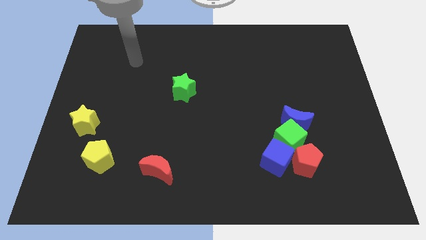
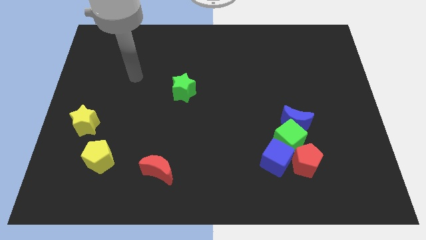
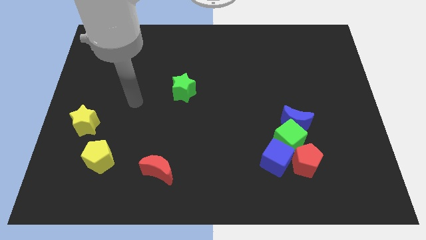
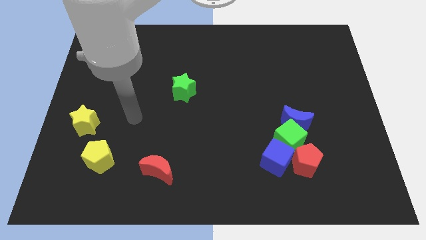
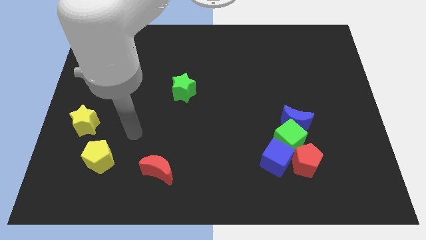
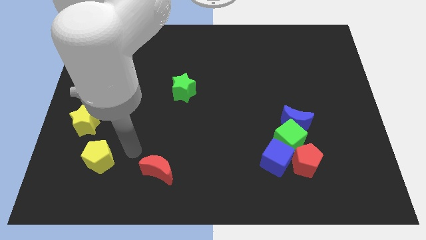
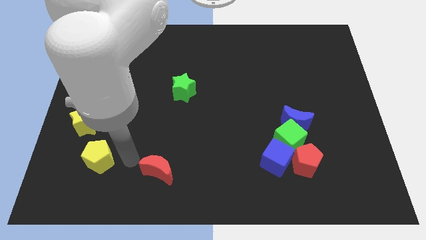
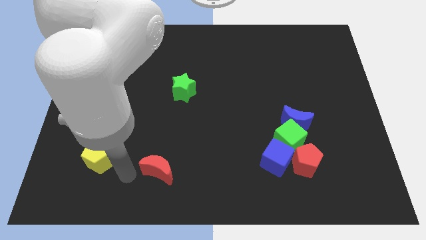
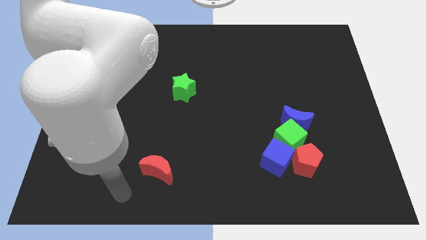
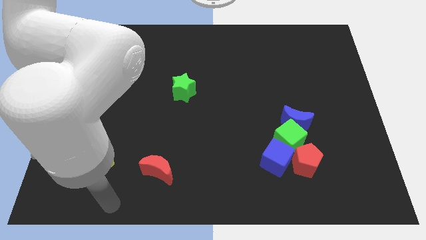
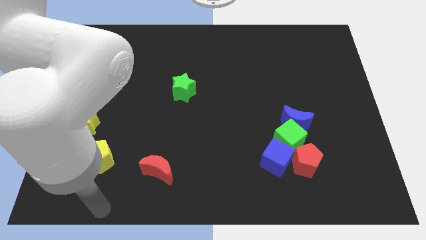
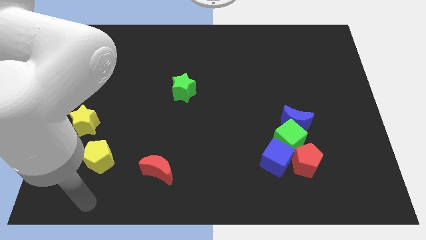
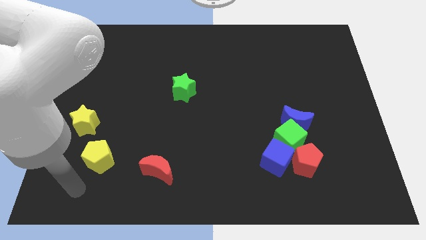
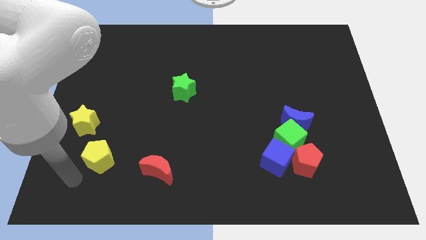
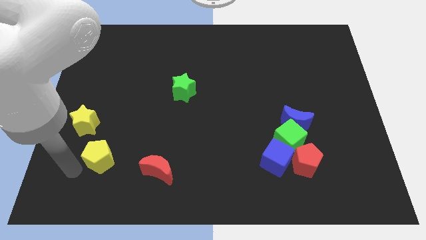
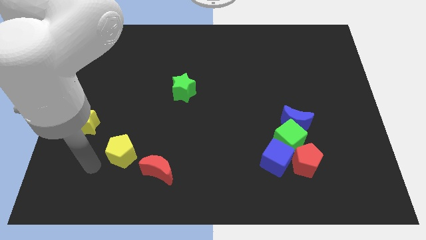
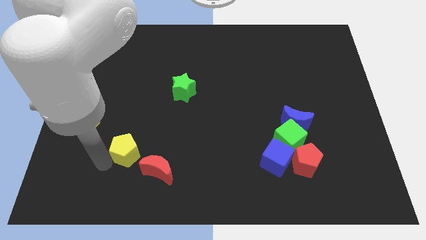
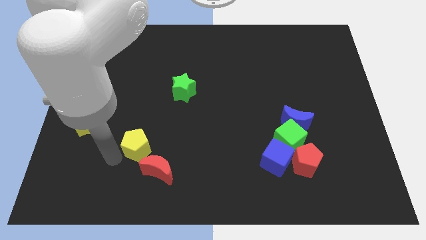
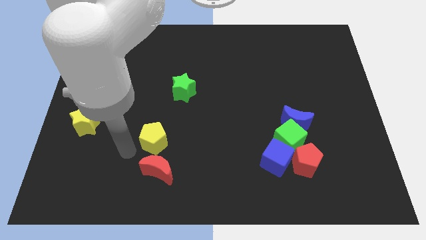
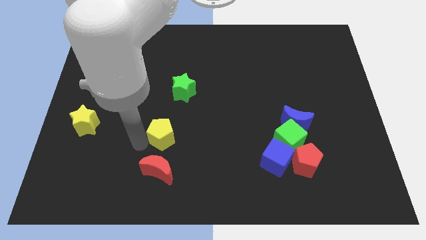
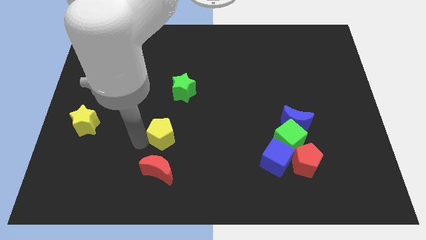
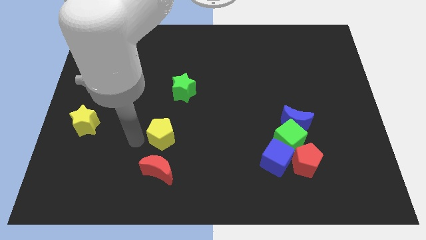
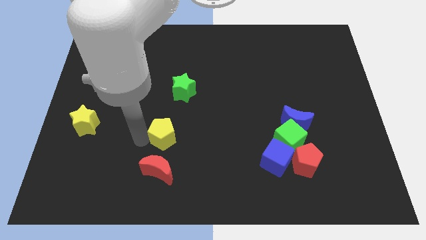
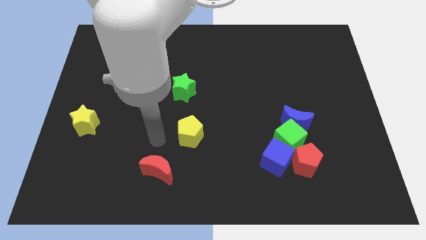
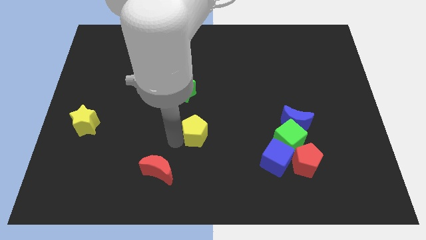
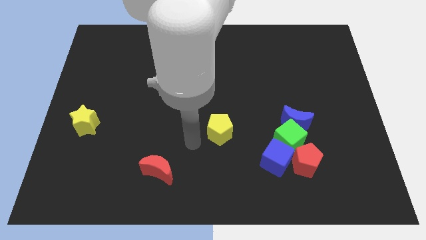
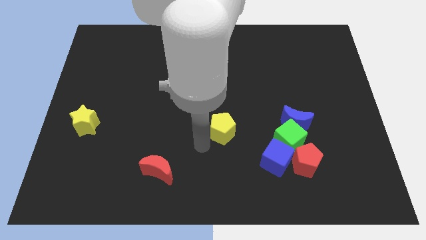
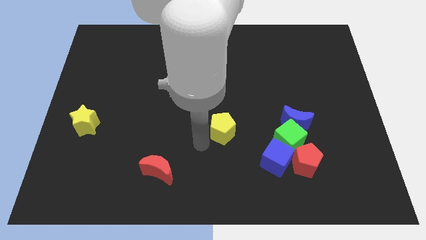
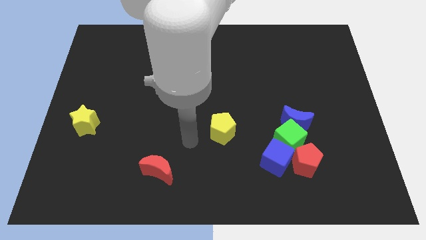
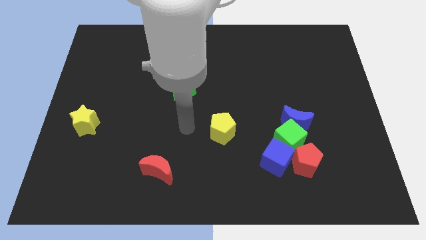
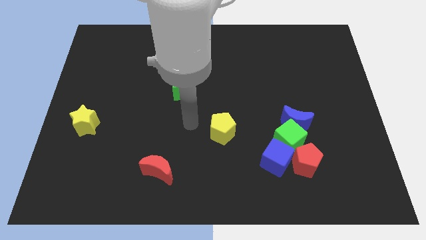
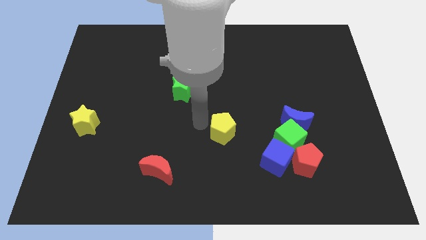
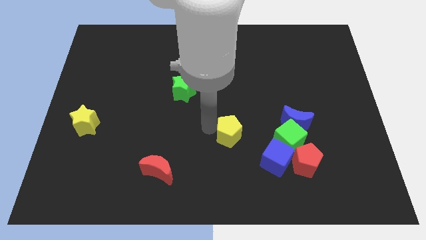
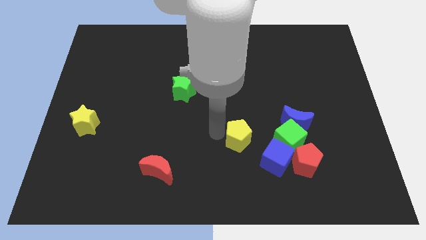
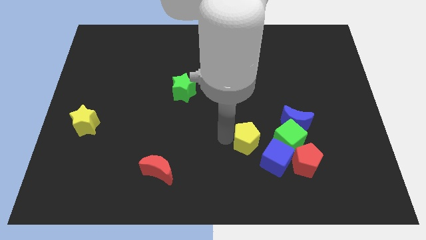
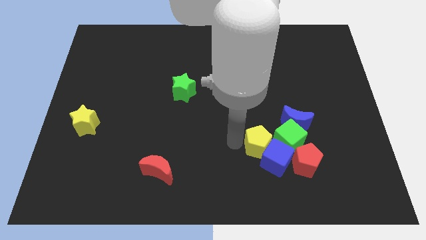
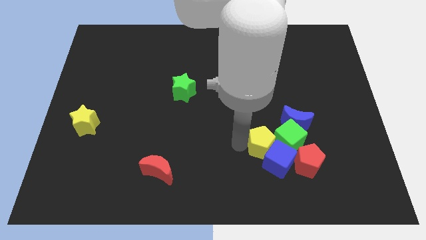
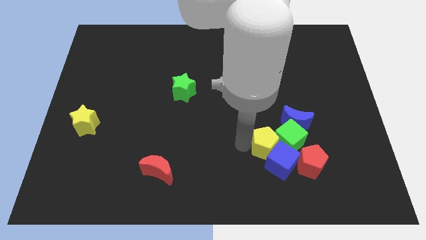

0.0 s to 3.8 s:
slide the yellow pentagon to the blue cube

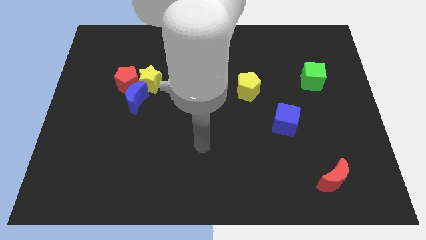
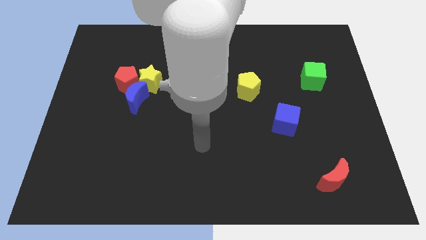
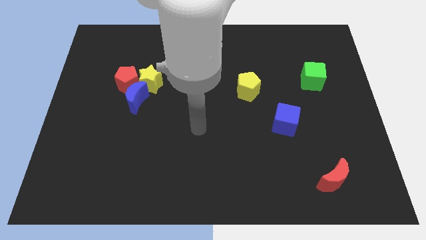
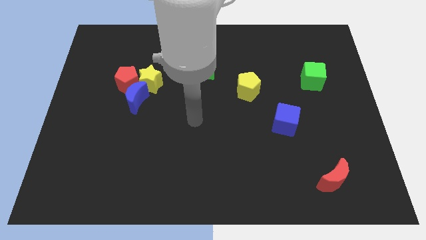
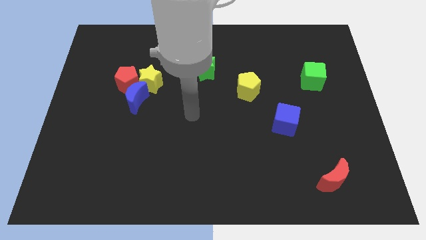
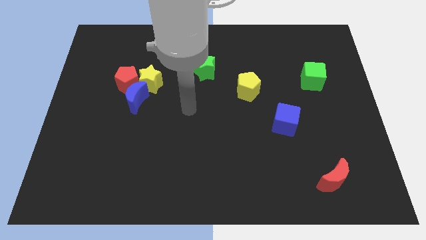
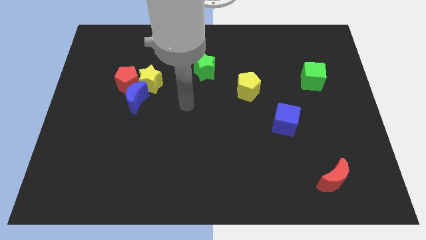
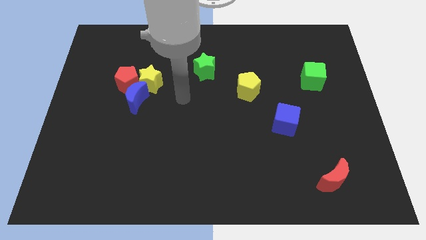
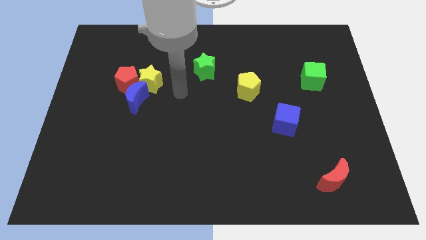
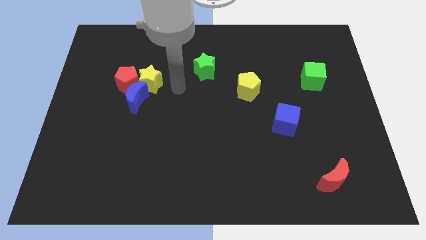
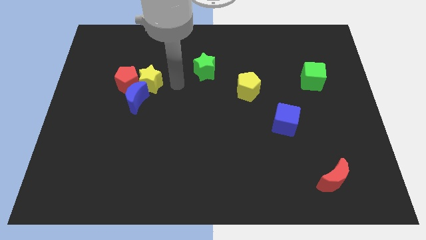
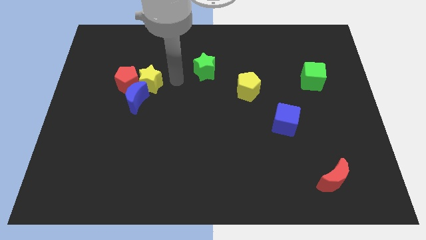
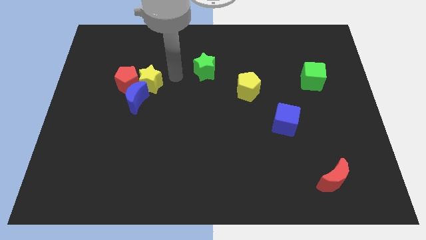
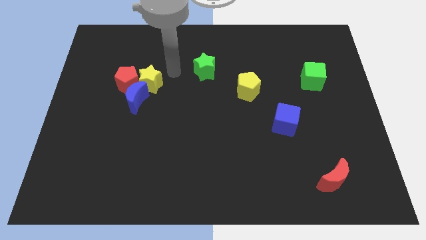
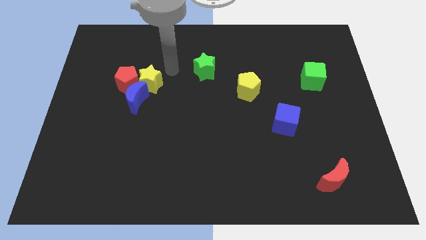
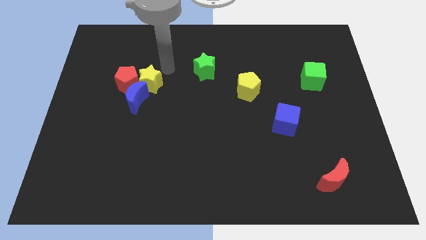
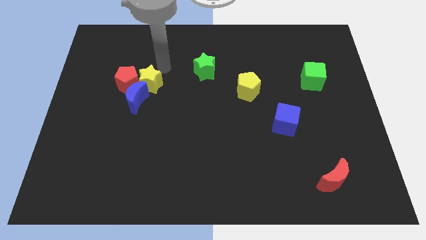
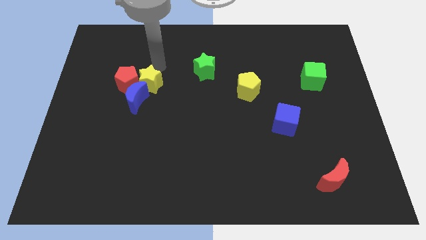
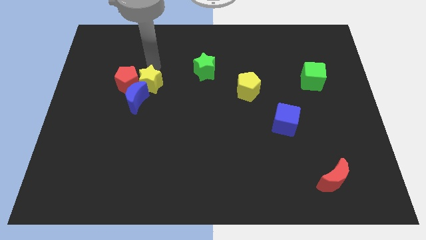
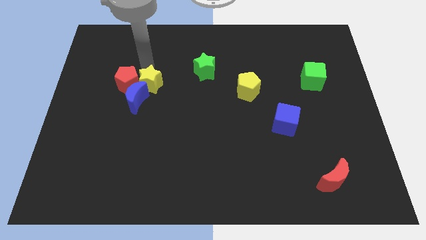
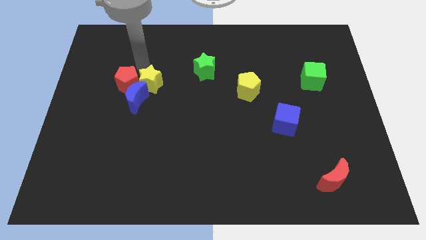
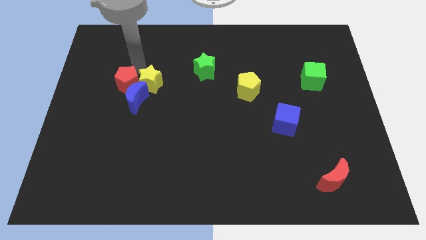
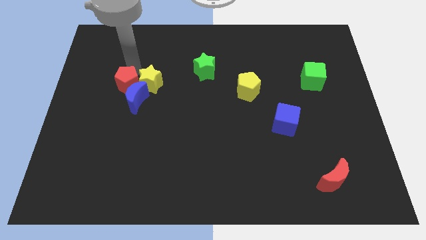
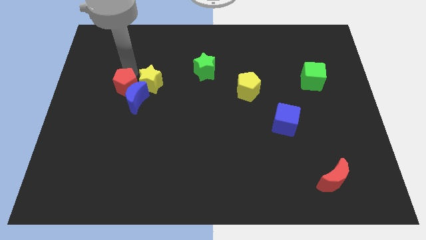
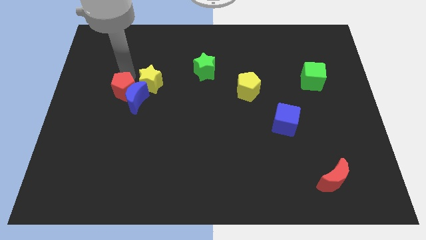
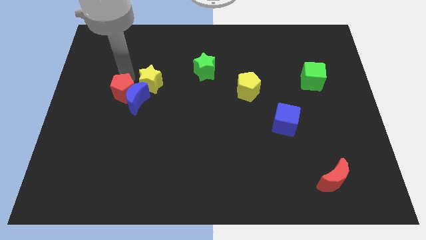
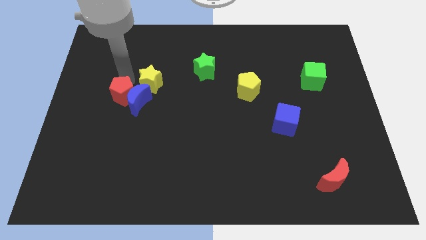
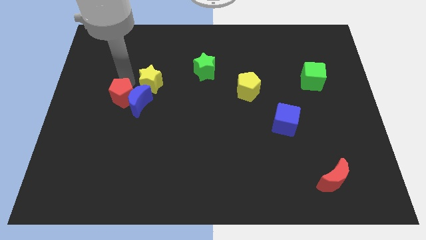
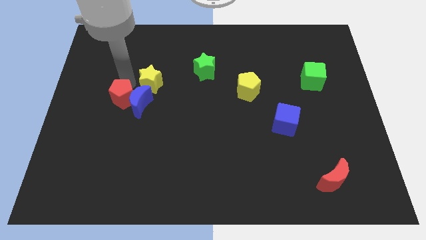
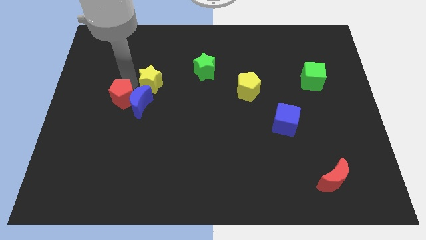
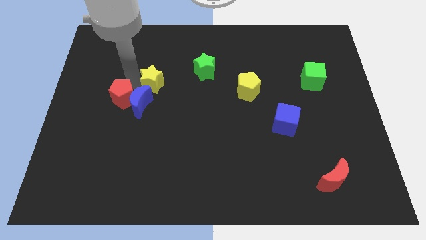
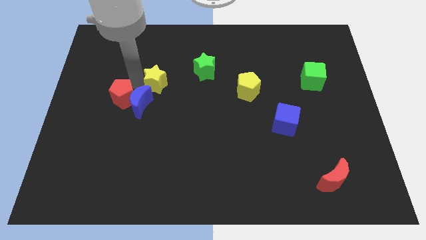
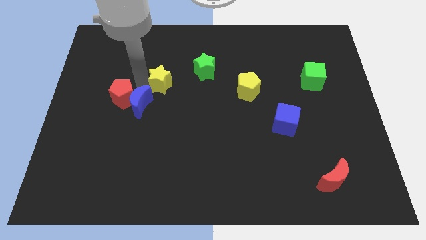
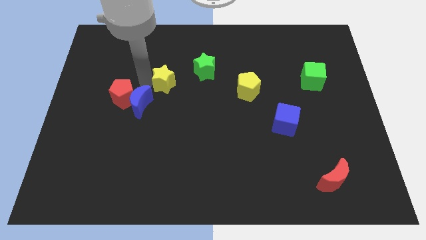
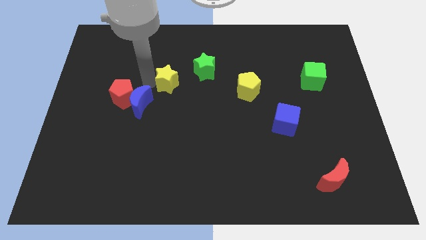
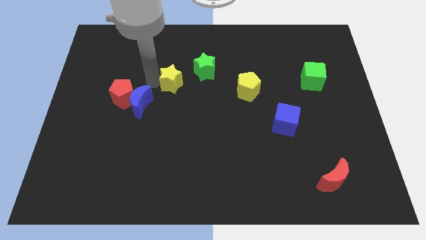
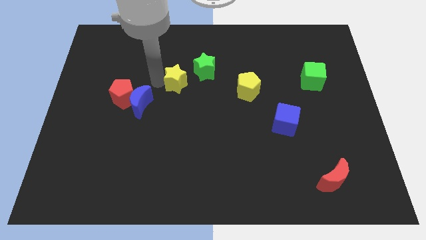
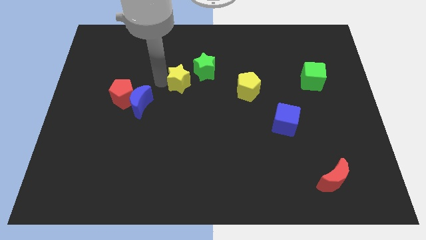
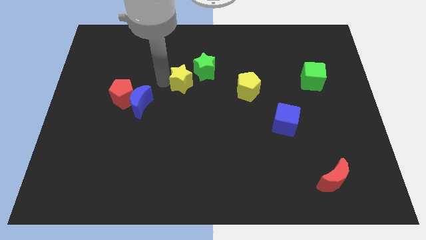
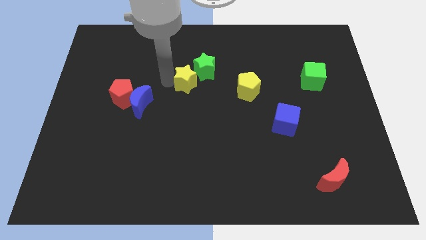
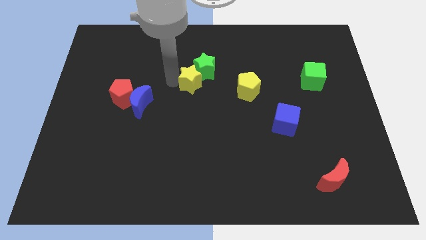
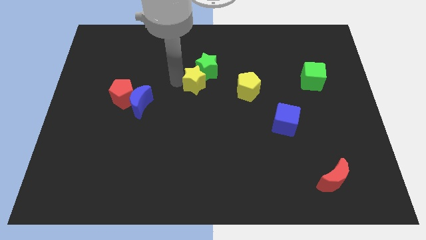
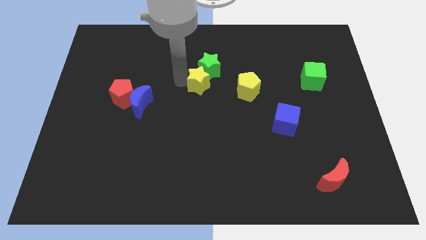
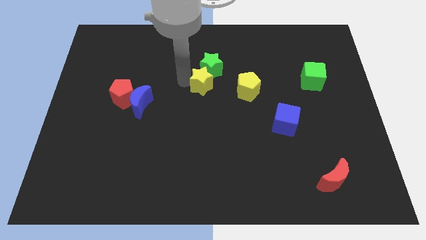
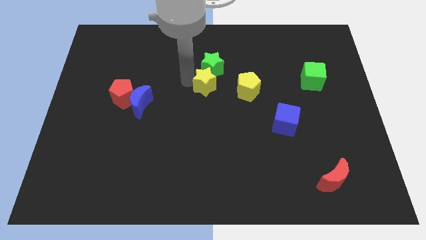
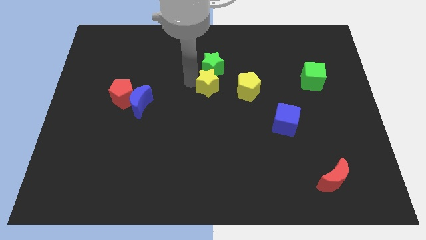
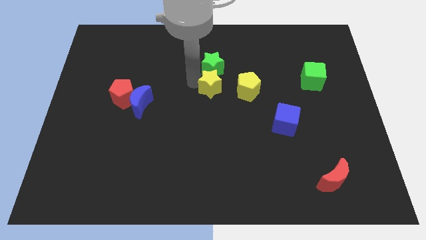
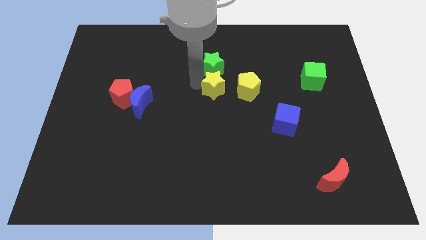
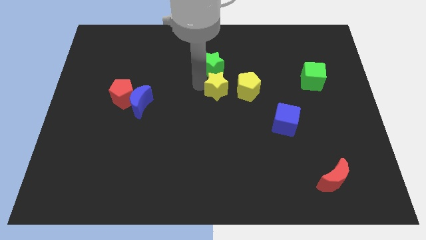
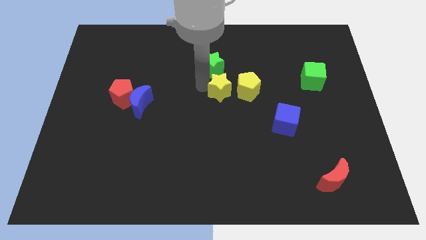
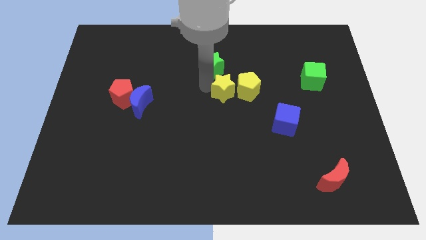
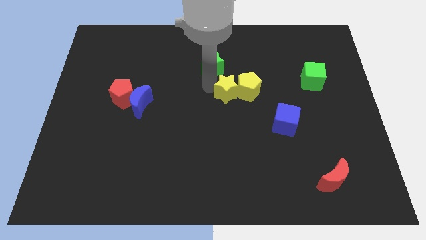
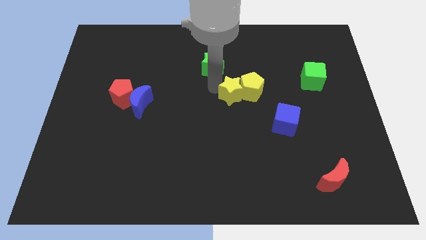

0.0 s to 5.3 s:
slide the yellow star next to the yellow pentagon
